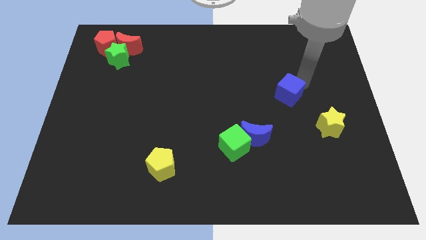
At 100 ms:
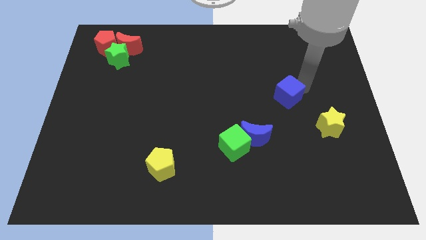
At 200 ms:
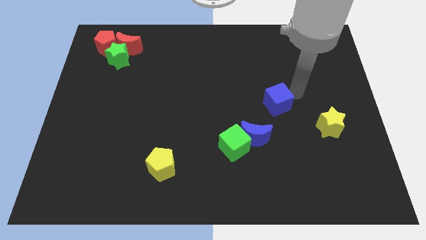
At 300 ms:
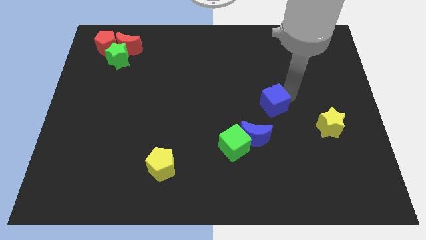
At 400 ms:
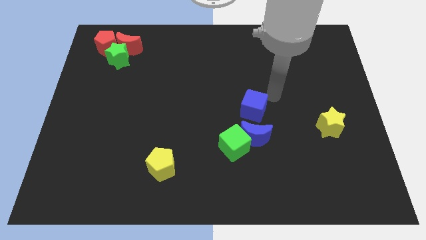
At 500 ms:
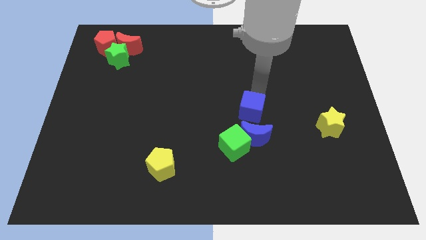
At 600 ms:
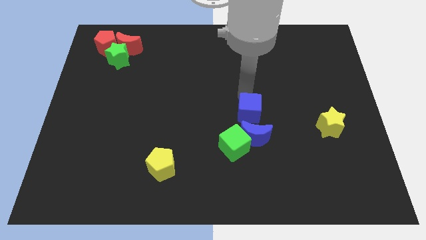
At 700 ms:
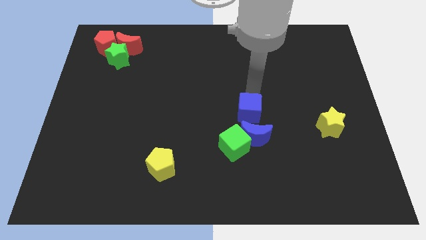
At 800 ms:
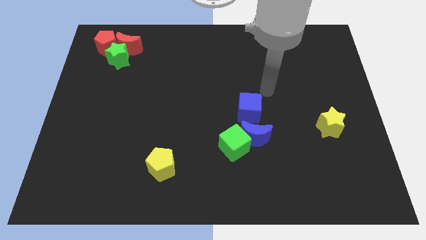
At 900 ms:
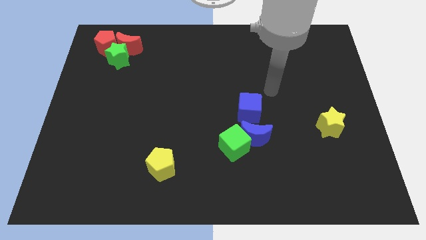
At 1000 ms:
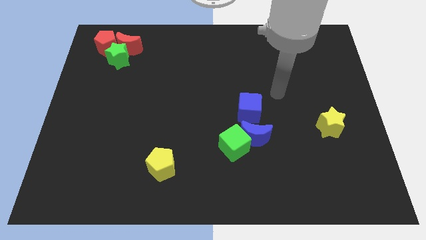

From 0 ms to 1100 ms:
push the blue cube to the top of the blue crescent

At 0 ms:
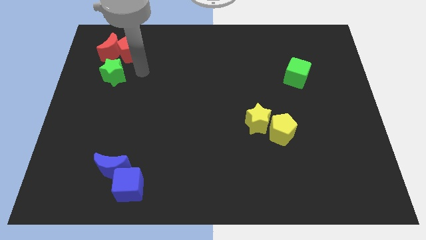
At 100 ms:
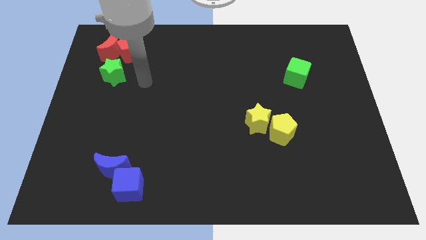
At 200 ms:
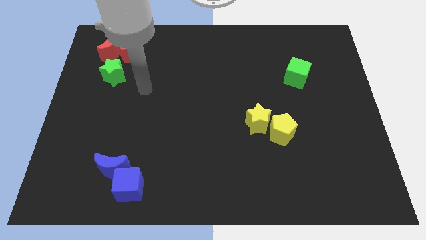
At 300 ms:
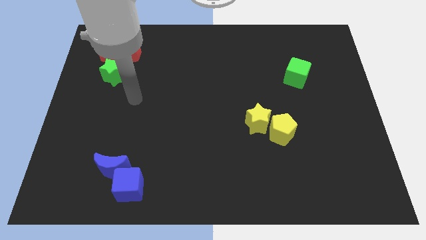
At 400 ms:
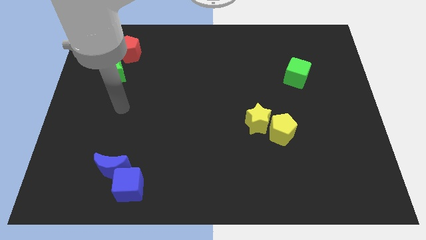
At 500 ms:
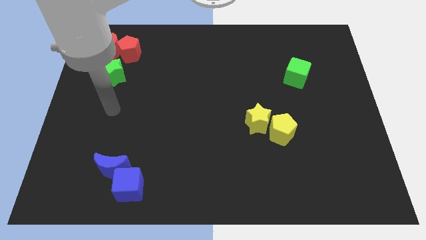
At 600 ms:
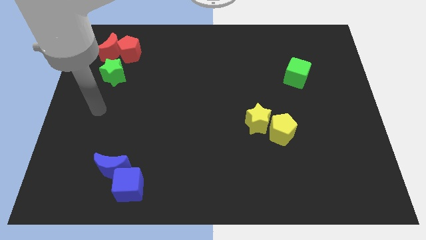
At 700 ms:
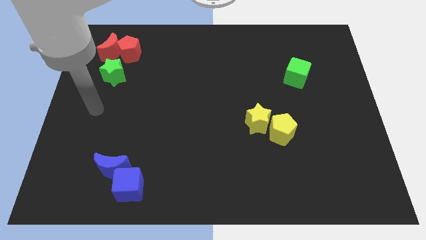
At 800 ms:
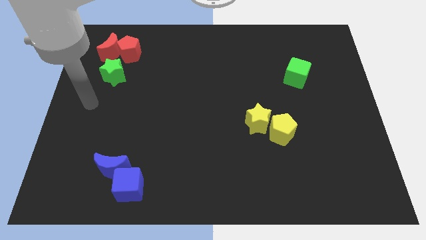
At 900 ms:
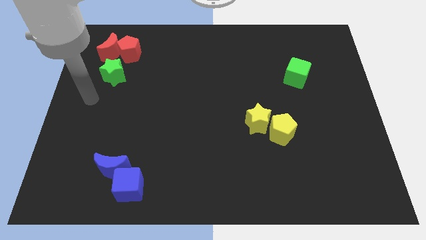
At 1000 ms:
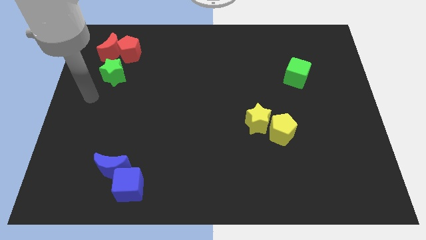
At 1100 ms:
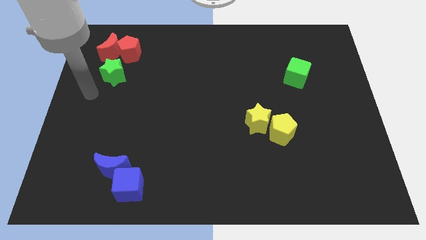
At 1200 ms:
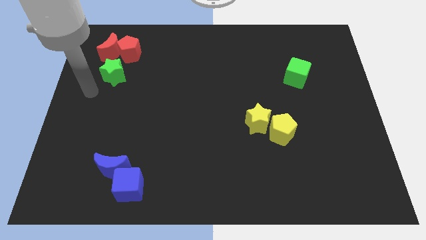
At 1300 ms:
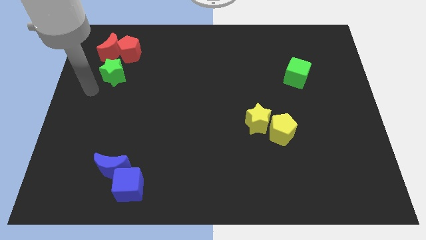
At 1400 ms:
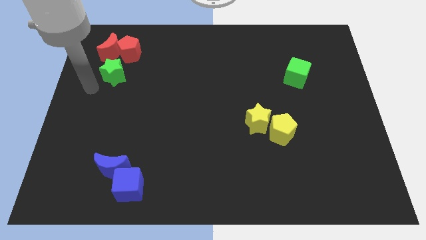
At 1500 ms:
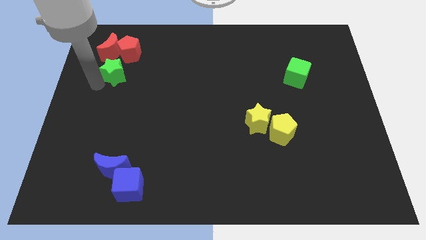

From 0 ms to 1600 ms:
place your arm at the bottom left side of green star

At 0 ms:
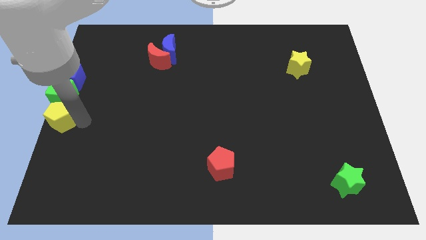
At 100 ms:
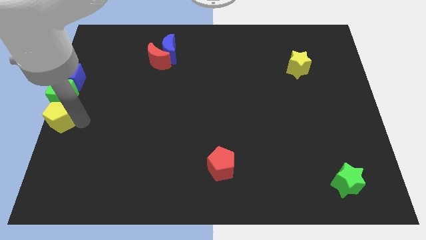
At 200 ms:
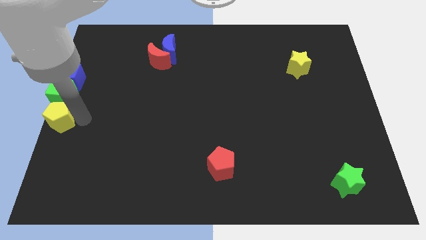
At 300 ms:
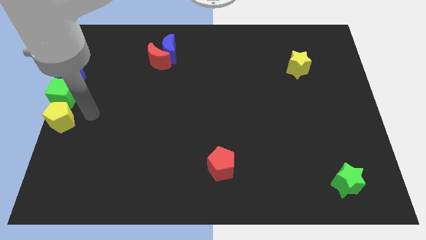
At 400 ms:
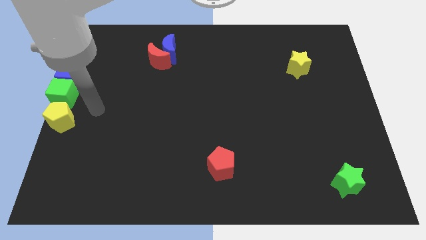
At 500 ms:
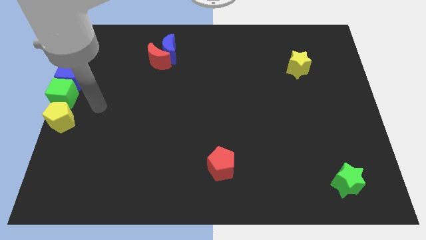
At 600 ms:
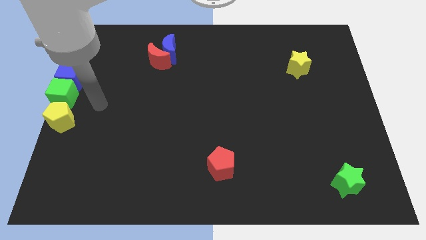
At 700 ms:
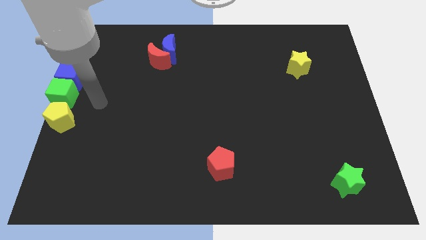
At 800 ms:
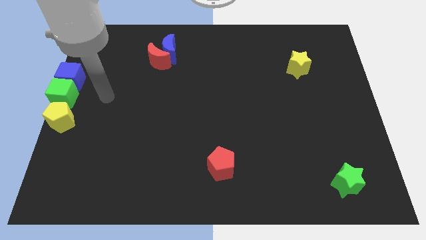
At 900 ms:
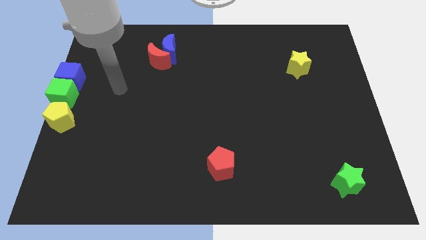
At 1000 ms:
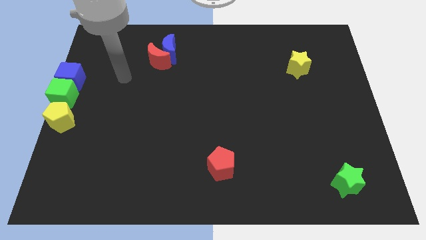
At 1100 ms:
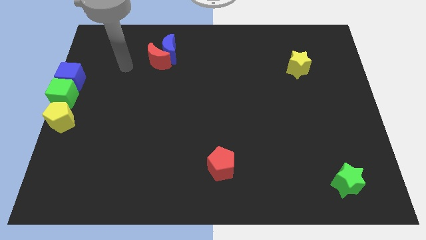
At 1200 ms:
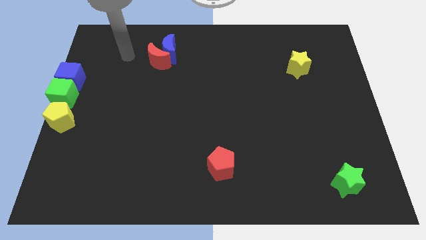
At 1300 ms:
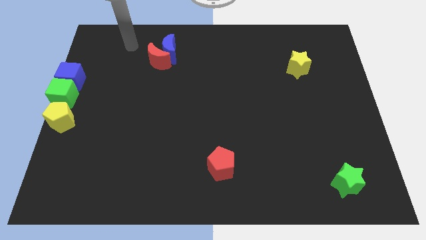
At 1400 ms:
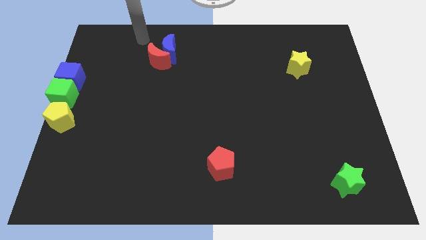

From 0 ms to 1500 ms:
move away your arm from yellow pentagon

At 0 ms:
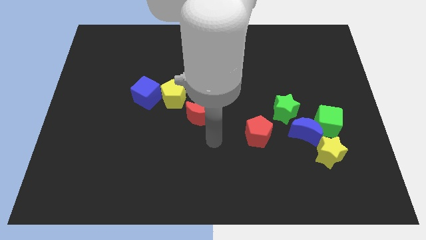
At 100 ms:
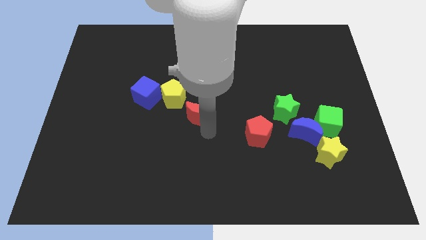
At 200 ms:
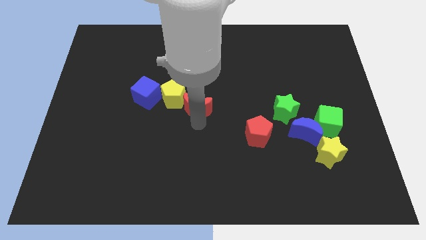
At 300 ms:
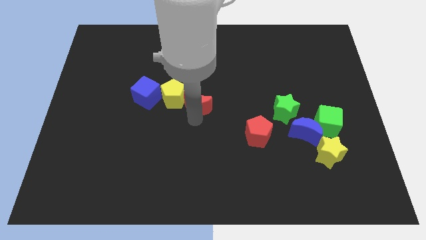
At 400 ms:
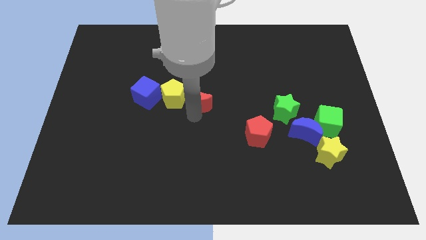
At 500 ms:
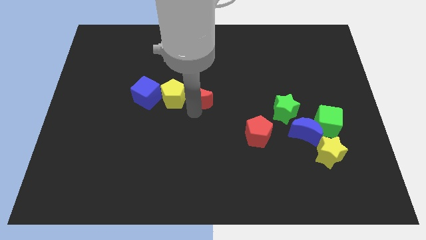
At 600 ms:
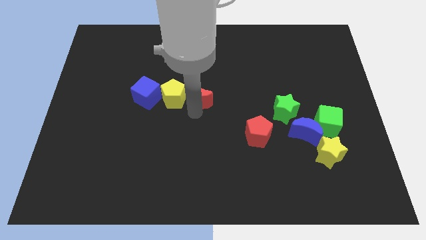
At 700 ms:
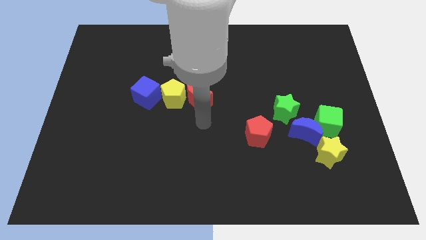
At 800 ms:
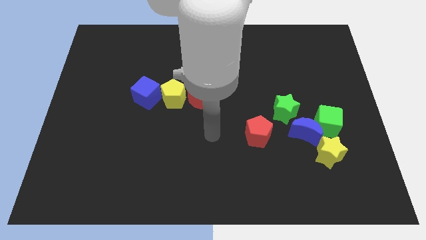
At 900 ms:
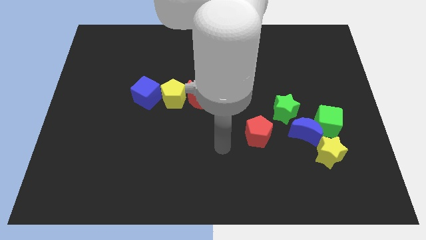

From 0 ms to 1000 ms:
place the red crescent right to the yellow pentagon

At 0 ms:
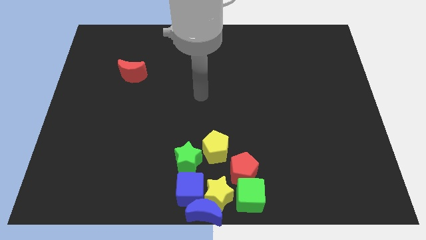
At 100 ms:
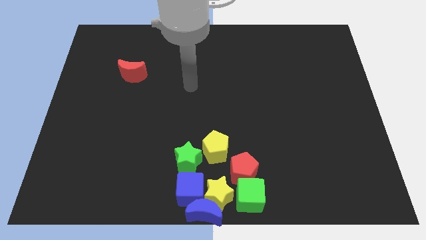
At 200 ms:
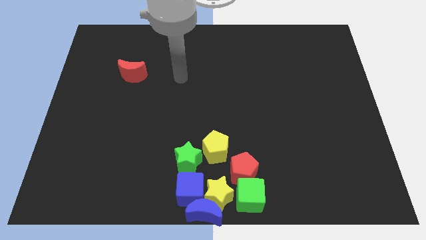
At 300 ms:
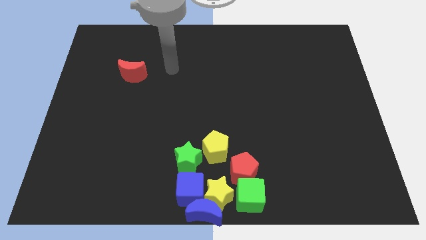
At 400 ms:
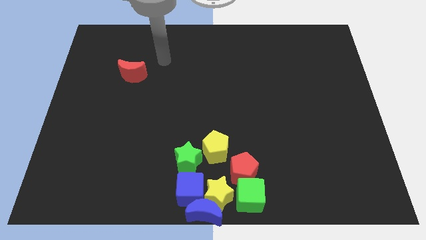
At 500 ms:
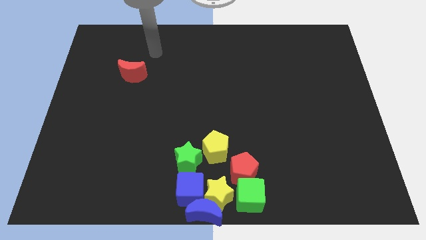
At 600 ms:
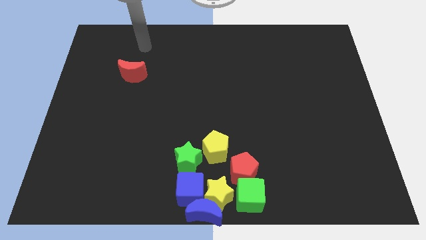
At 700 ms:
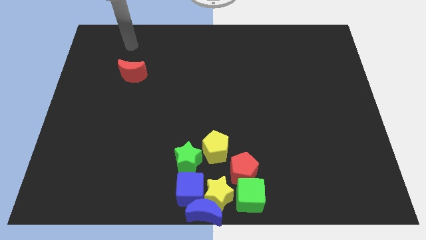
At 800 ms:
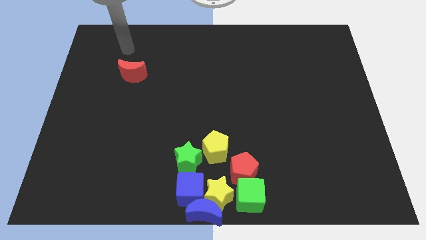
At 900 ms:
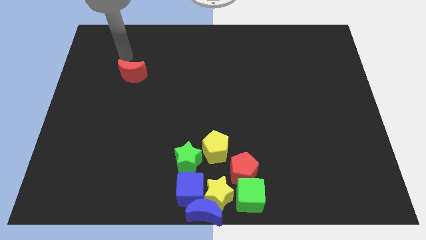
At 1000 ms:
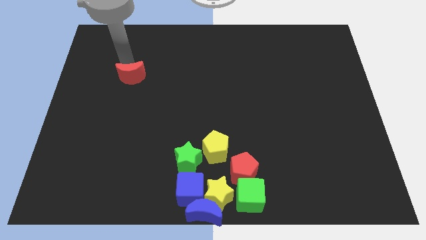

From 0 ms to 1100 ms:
tap the red crescent

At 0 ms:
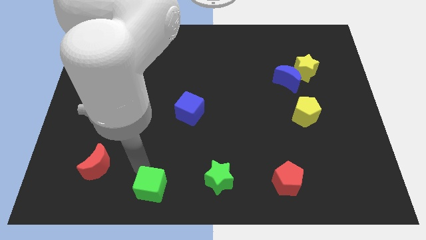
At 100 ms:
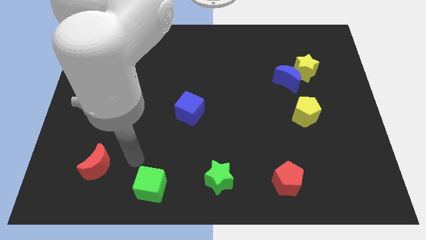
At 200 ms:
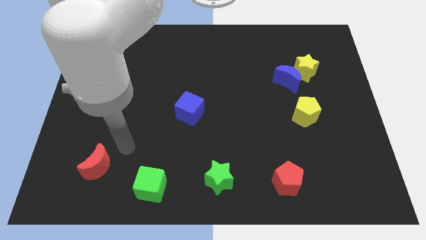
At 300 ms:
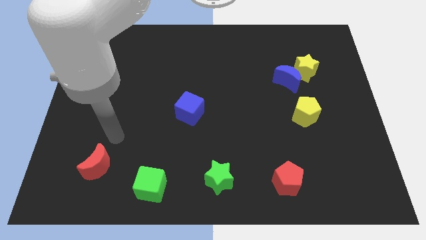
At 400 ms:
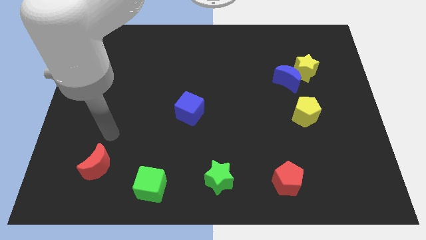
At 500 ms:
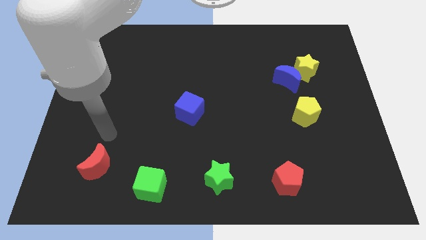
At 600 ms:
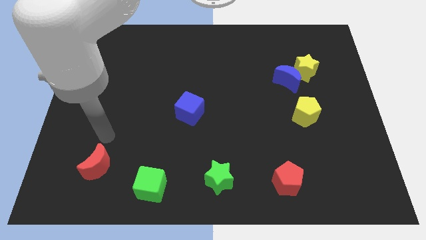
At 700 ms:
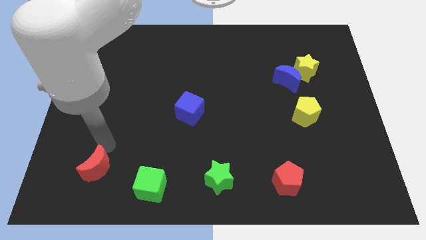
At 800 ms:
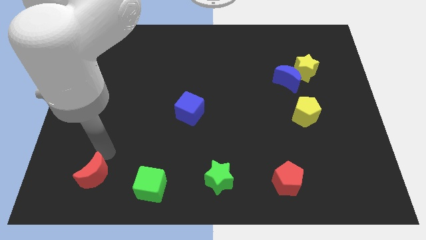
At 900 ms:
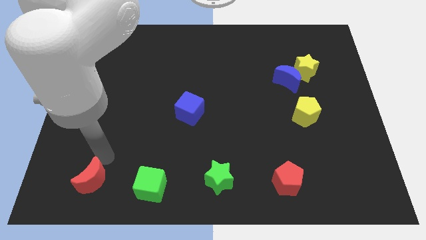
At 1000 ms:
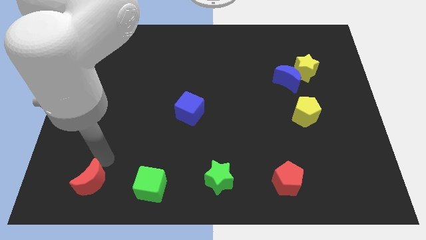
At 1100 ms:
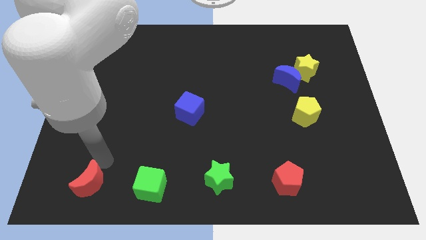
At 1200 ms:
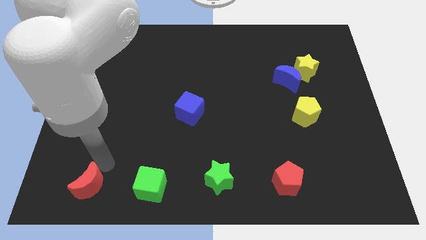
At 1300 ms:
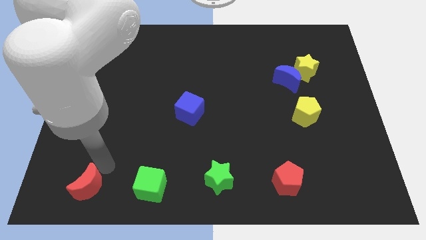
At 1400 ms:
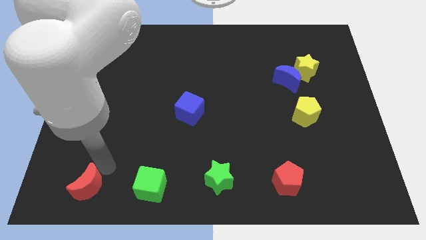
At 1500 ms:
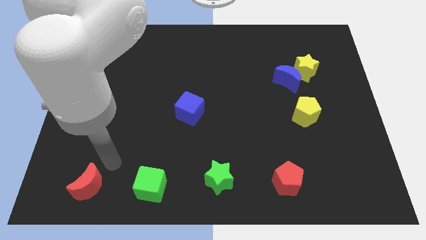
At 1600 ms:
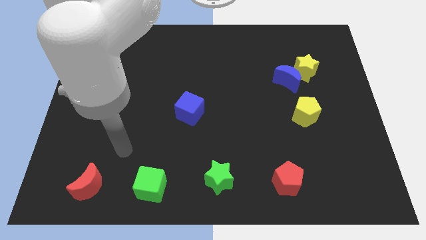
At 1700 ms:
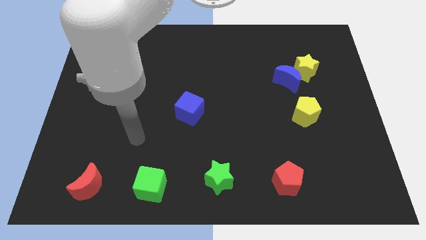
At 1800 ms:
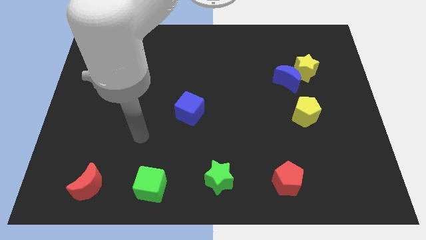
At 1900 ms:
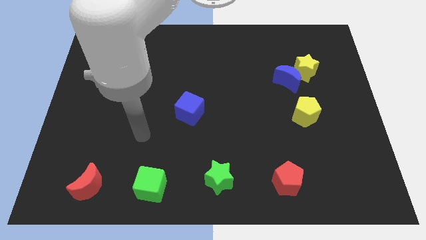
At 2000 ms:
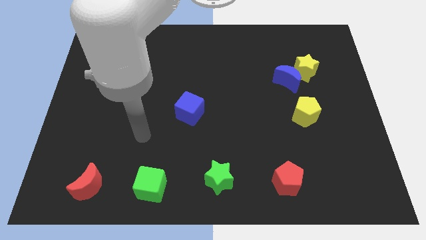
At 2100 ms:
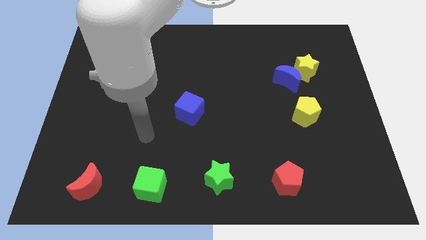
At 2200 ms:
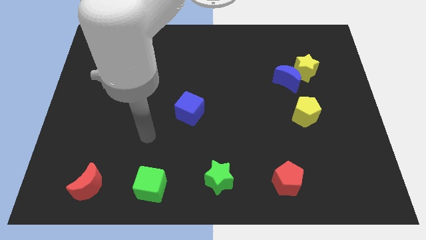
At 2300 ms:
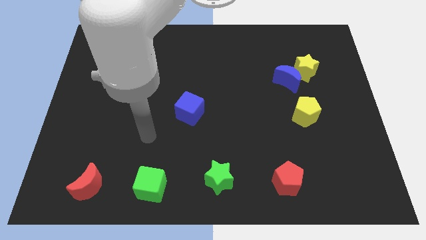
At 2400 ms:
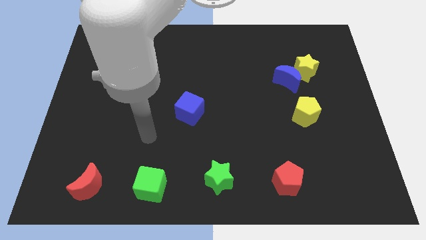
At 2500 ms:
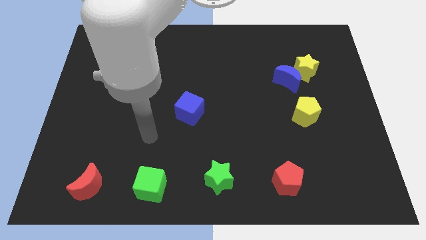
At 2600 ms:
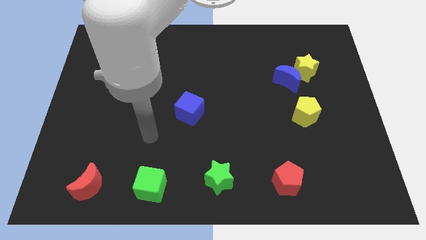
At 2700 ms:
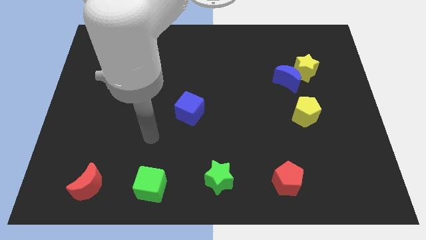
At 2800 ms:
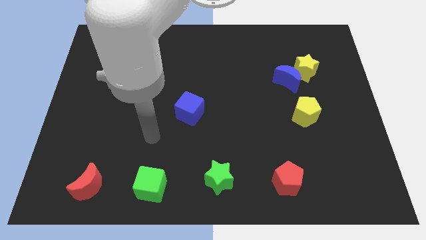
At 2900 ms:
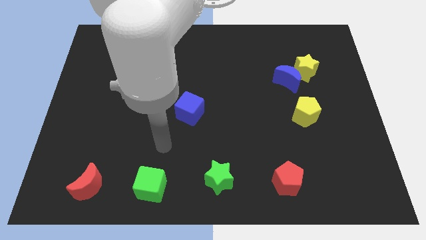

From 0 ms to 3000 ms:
place the red crescent horizontal parallel to the green cube
